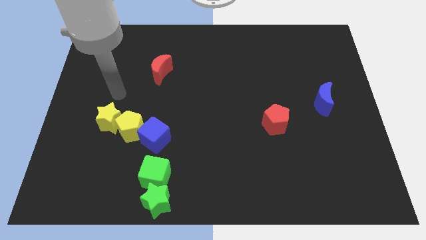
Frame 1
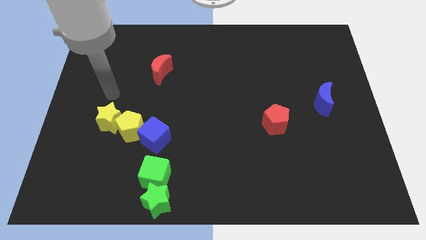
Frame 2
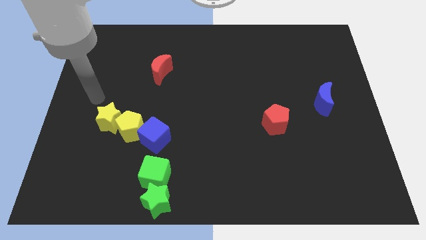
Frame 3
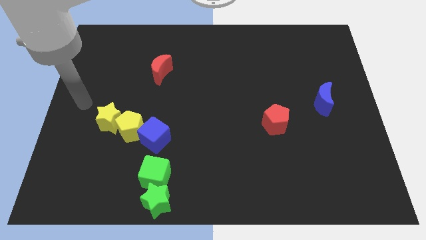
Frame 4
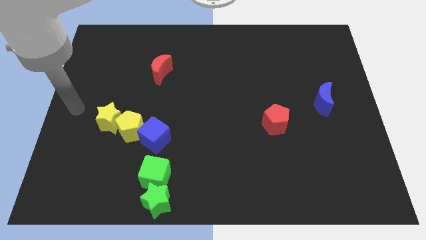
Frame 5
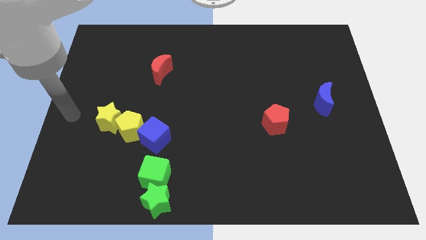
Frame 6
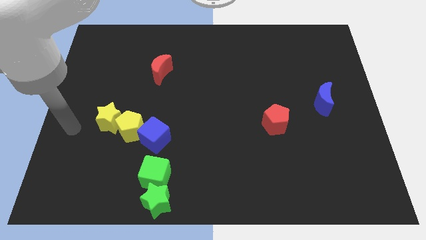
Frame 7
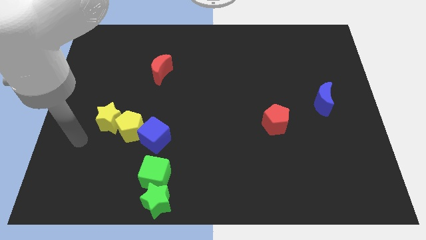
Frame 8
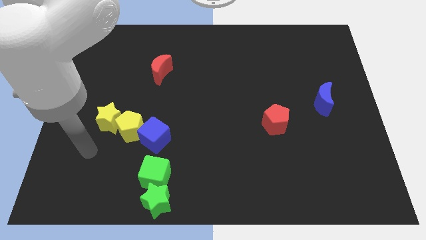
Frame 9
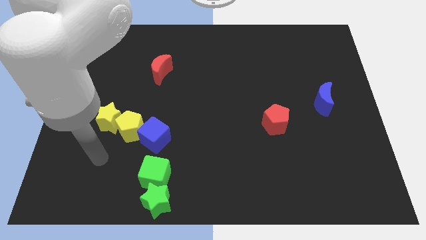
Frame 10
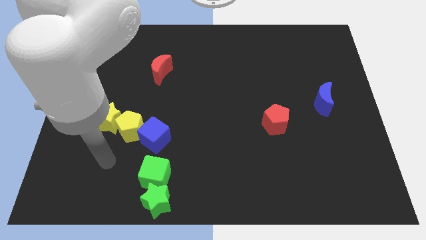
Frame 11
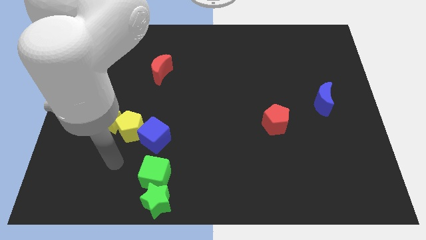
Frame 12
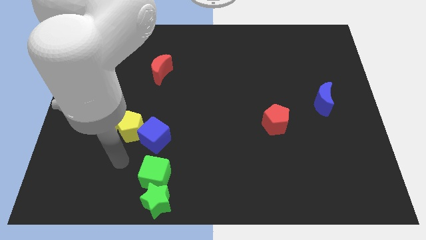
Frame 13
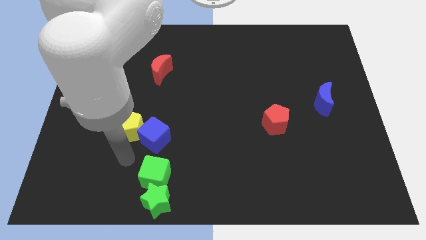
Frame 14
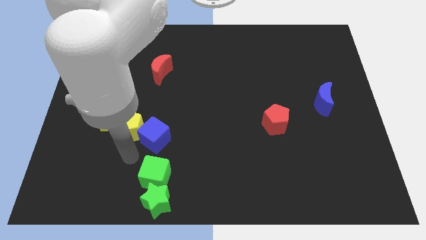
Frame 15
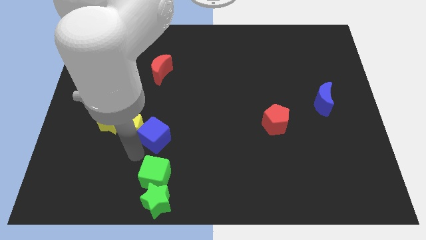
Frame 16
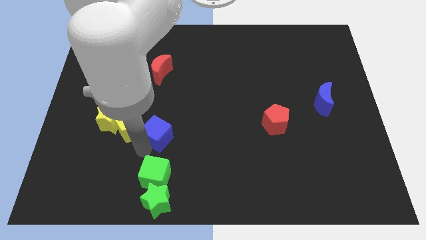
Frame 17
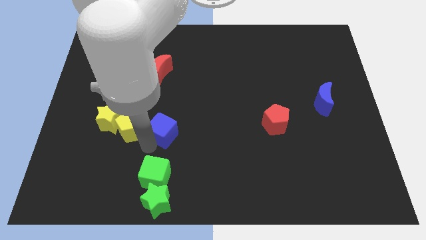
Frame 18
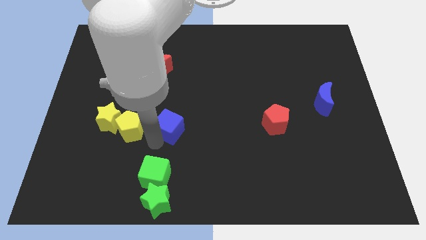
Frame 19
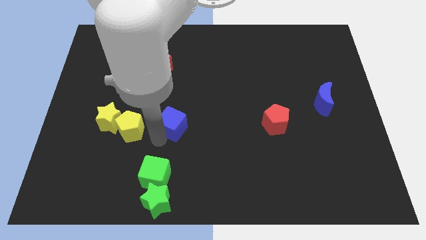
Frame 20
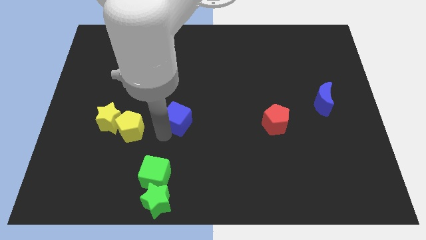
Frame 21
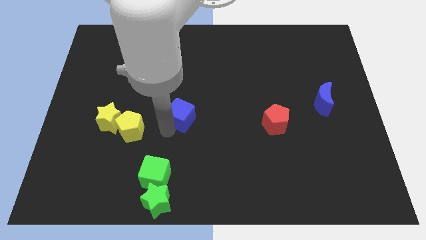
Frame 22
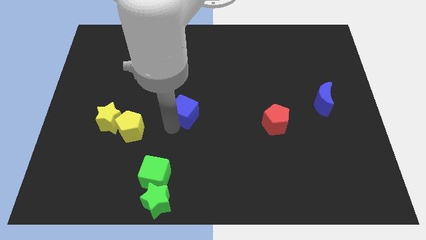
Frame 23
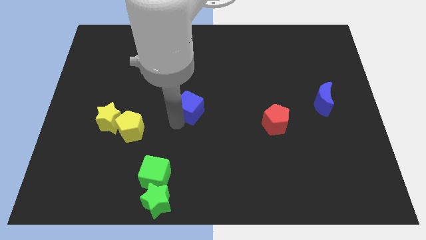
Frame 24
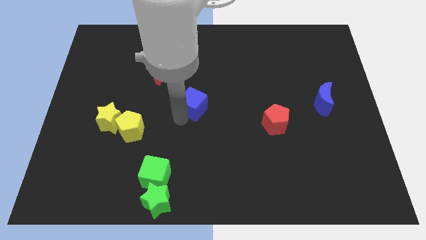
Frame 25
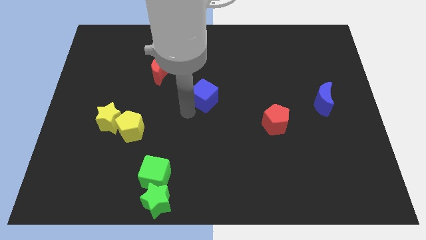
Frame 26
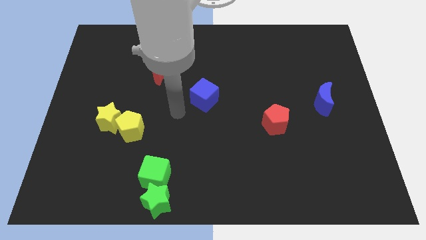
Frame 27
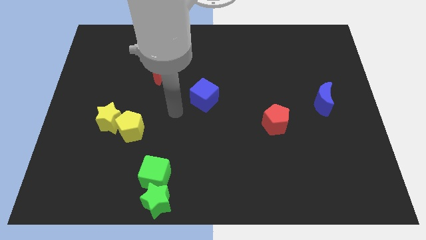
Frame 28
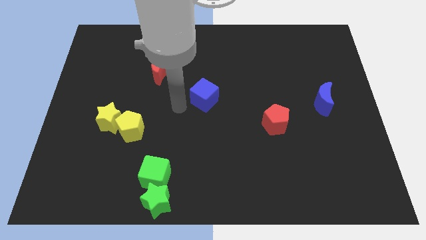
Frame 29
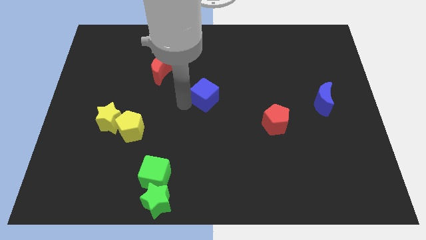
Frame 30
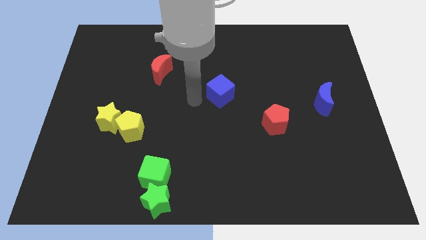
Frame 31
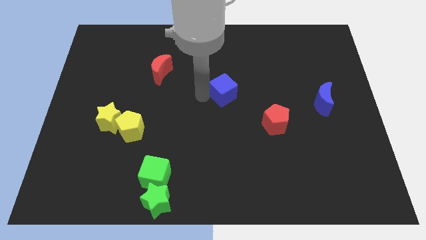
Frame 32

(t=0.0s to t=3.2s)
push the blue cube to the left of blue crescent

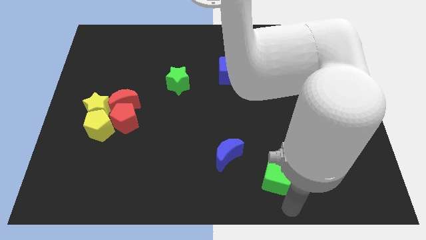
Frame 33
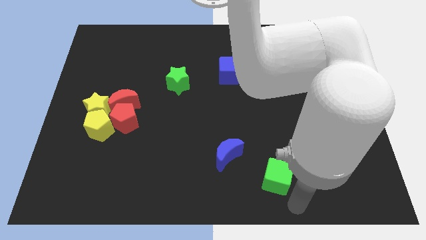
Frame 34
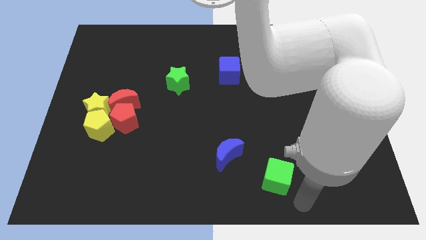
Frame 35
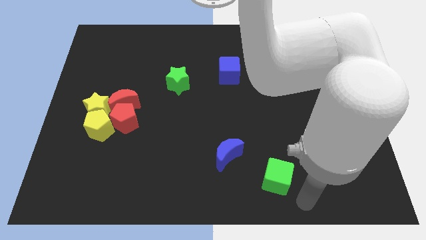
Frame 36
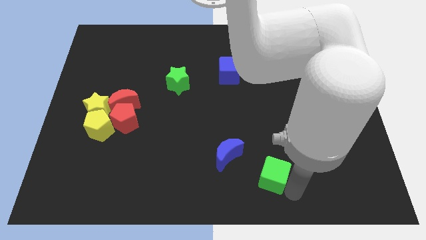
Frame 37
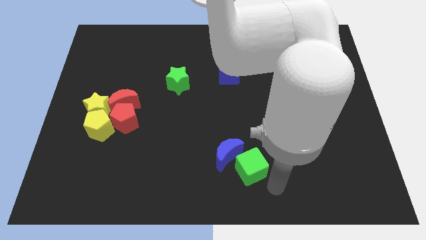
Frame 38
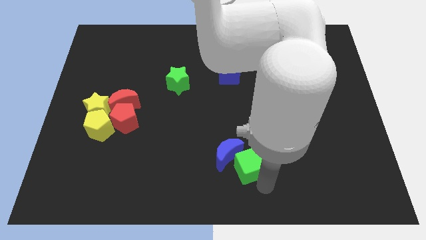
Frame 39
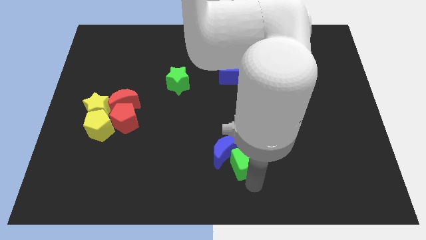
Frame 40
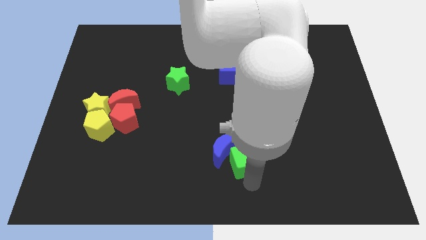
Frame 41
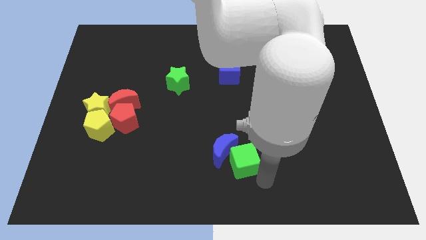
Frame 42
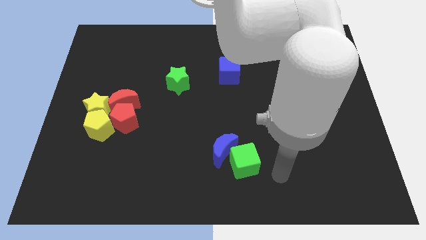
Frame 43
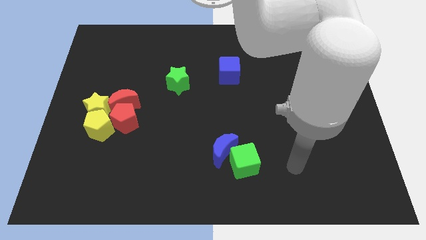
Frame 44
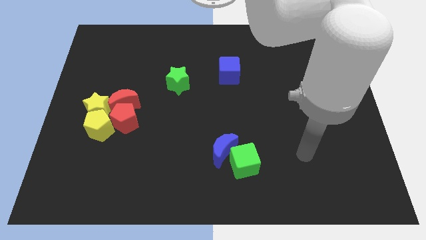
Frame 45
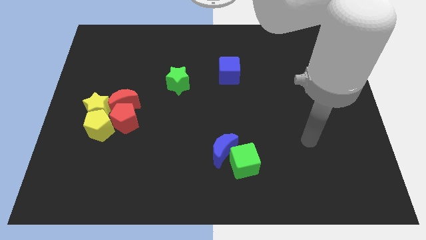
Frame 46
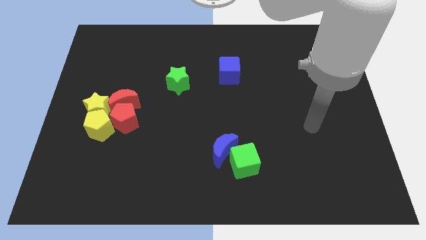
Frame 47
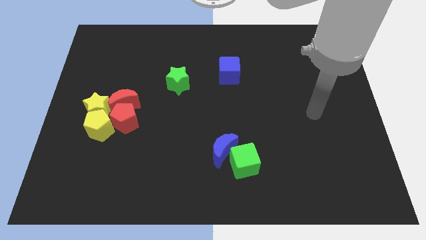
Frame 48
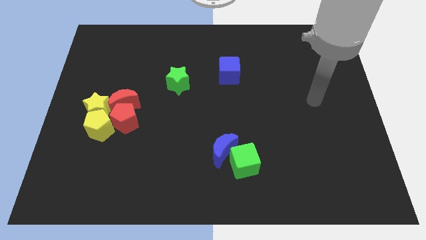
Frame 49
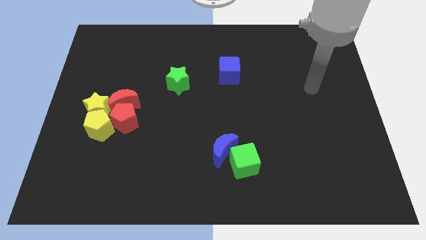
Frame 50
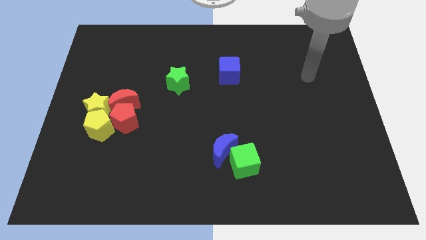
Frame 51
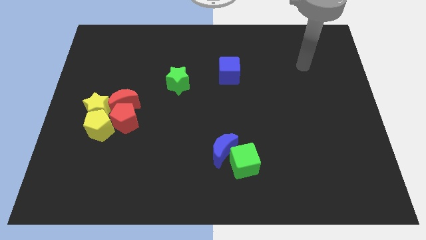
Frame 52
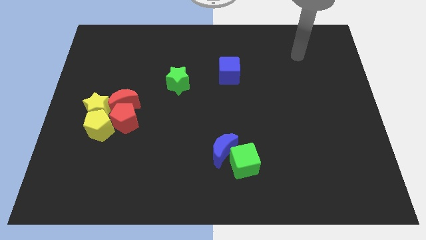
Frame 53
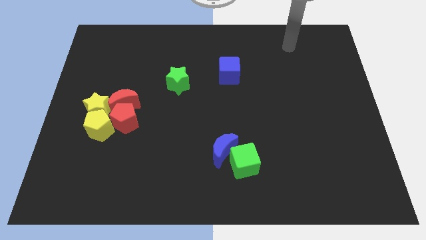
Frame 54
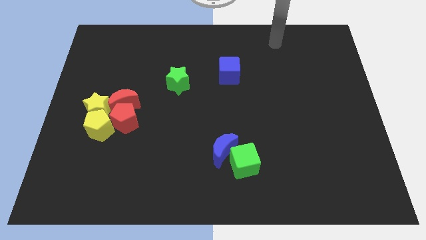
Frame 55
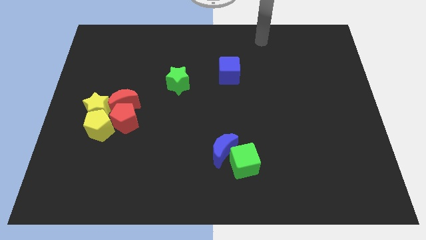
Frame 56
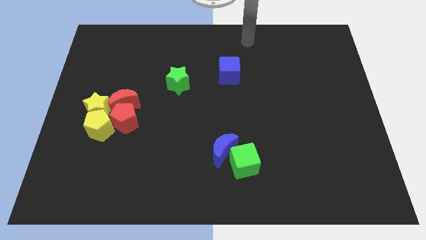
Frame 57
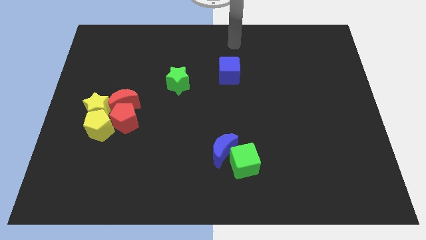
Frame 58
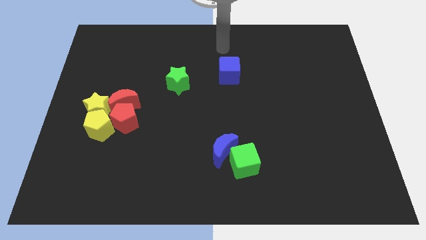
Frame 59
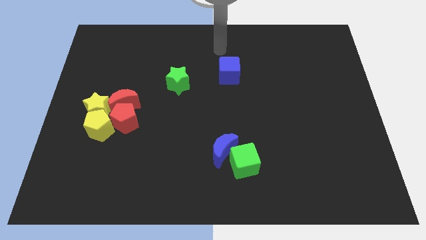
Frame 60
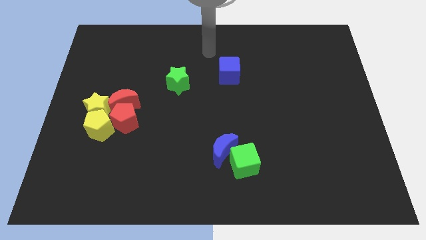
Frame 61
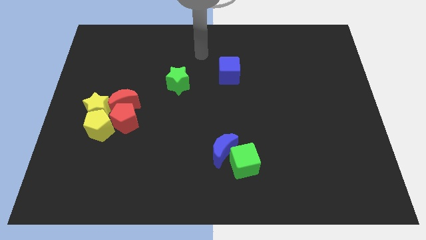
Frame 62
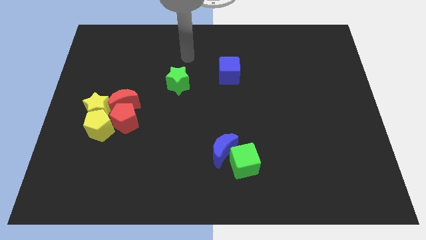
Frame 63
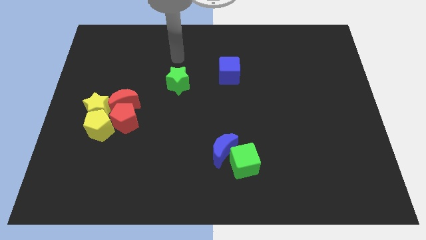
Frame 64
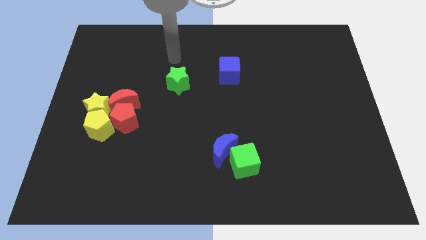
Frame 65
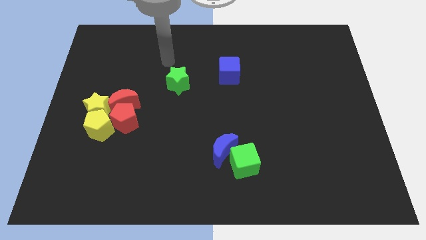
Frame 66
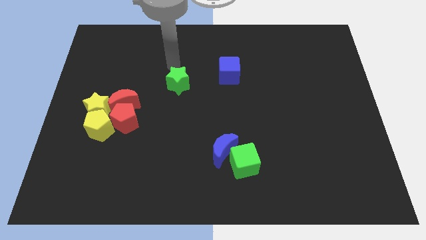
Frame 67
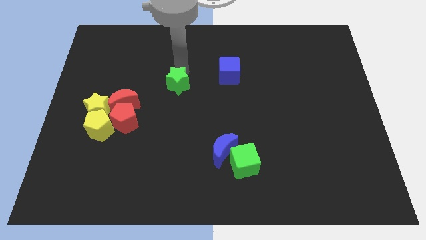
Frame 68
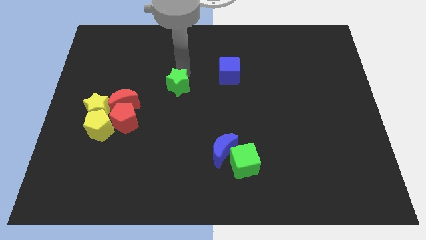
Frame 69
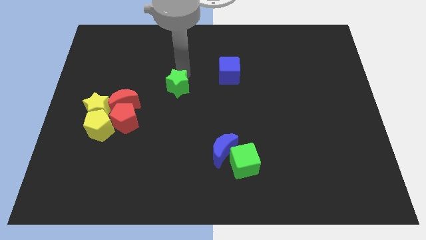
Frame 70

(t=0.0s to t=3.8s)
move the green cube towards the blue crescent

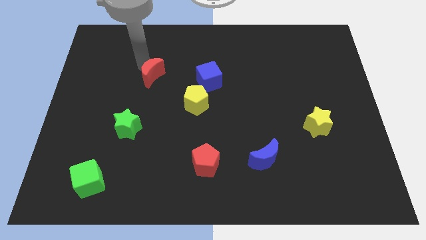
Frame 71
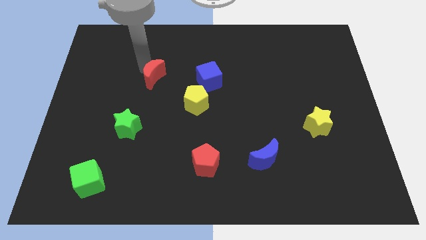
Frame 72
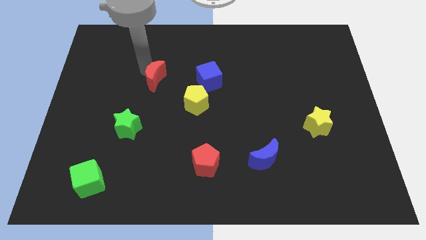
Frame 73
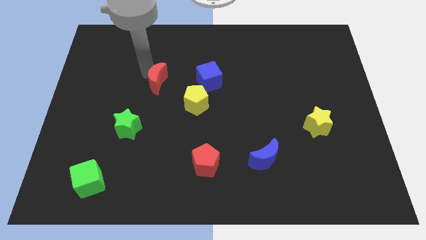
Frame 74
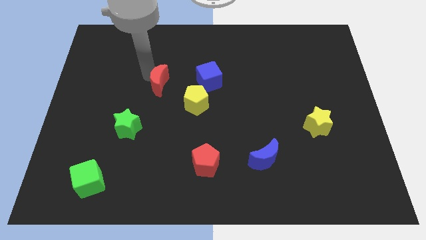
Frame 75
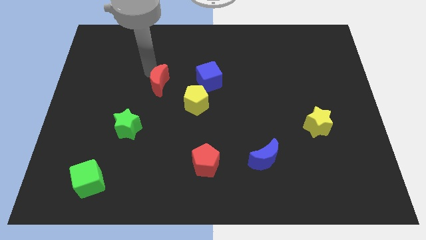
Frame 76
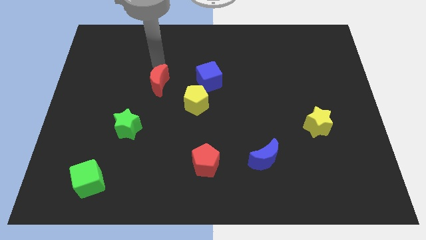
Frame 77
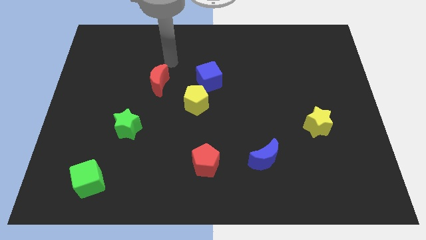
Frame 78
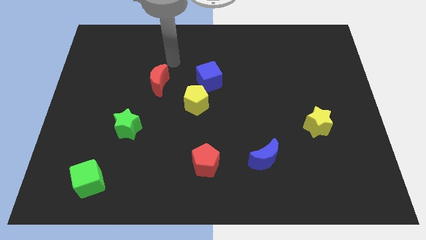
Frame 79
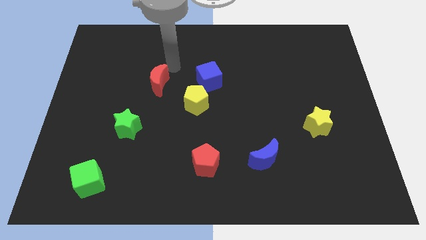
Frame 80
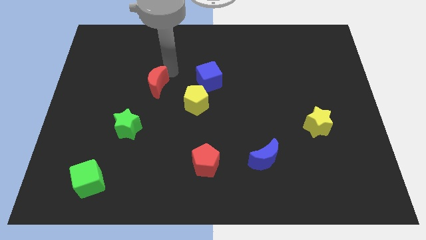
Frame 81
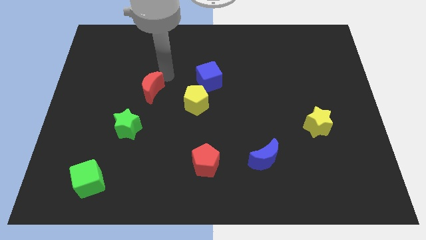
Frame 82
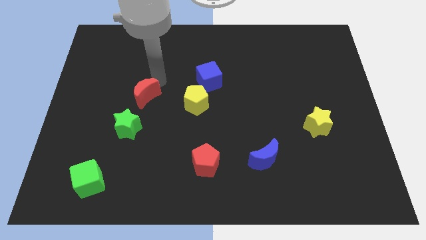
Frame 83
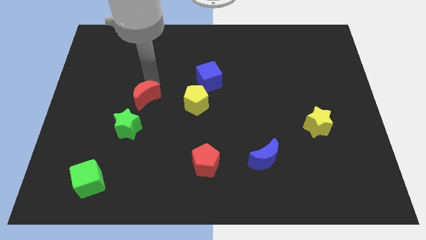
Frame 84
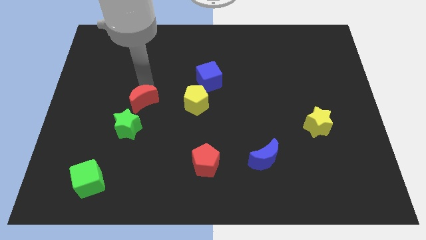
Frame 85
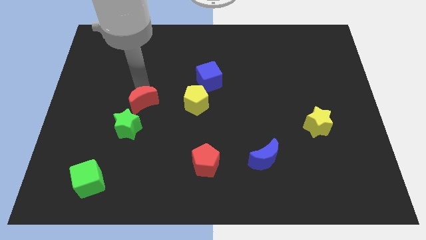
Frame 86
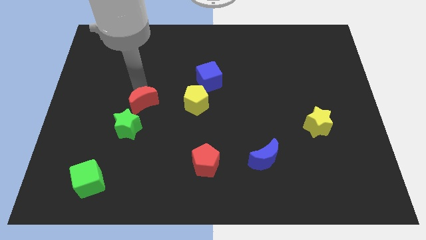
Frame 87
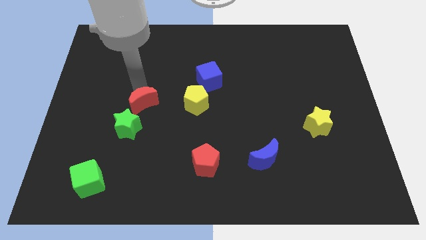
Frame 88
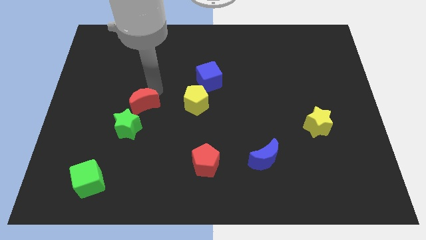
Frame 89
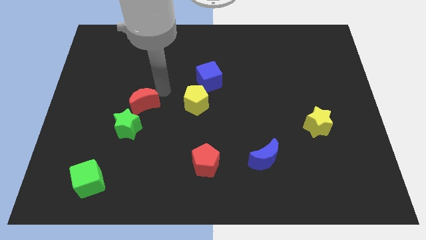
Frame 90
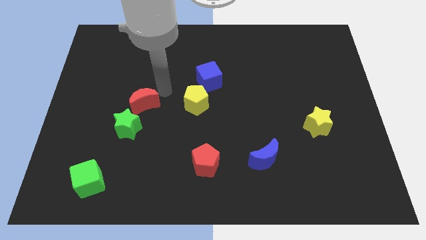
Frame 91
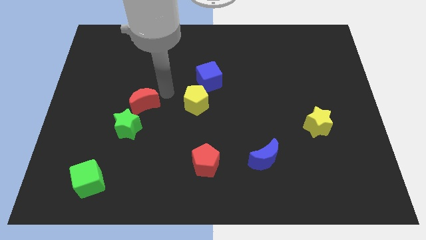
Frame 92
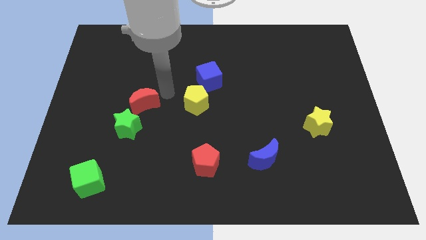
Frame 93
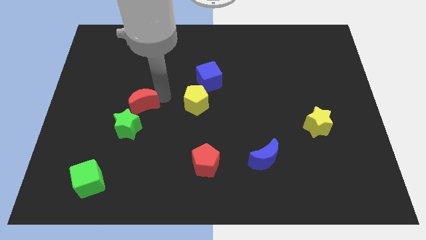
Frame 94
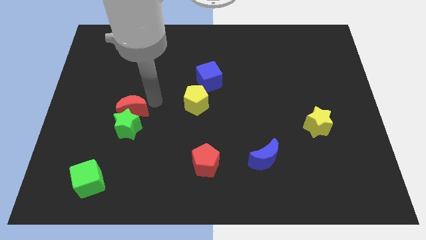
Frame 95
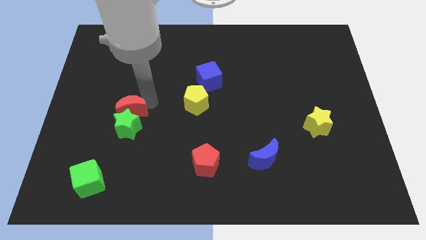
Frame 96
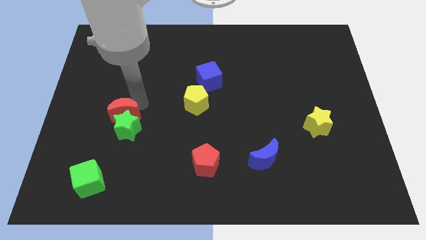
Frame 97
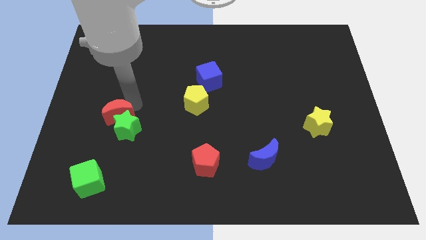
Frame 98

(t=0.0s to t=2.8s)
push red moon in to green star
